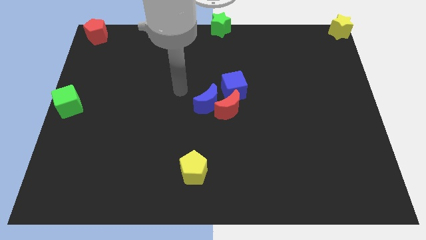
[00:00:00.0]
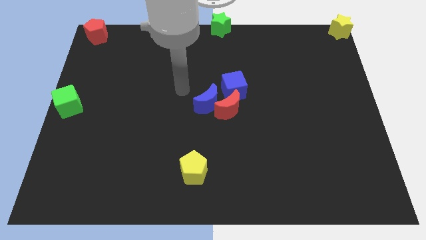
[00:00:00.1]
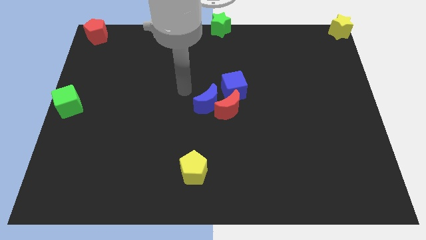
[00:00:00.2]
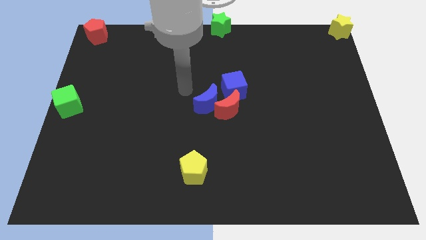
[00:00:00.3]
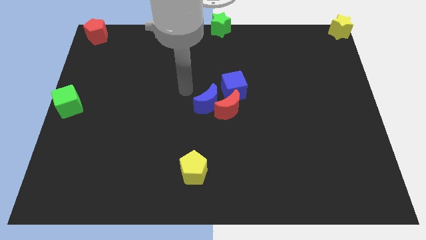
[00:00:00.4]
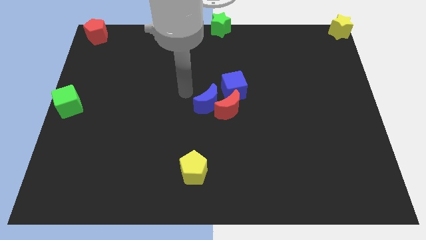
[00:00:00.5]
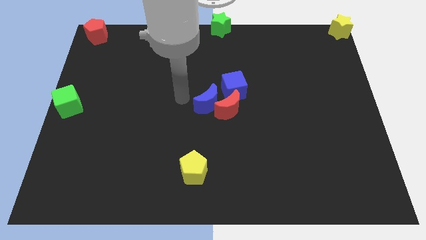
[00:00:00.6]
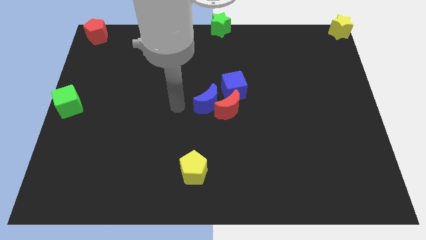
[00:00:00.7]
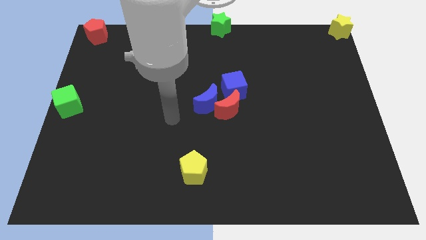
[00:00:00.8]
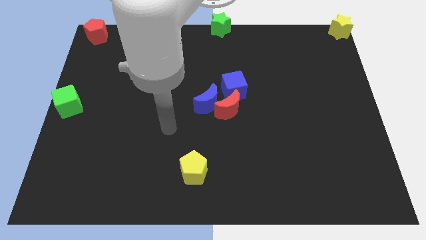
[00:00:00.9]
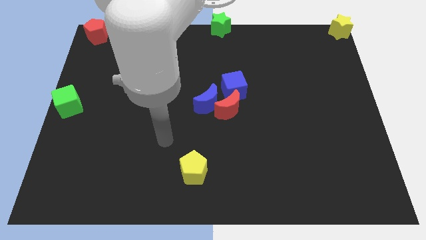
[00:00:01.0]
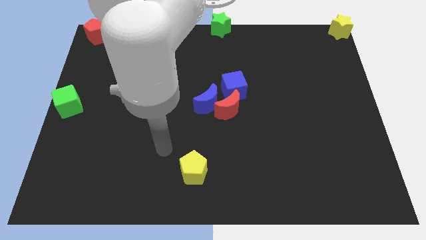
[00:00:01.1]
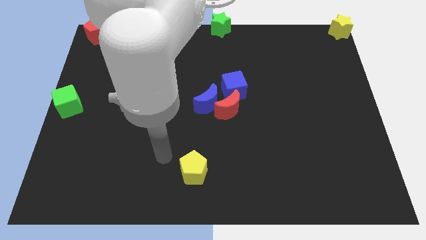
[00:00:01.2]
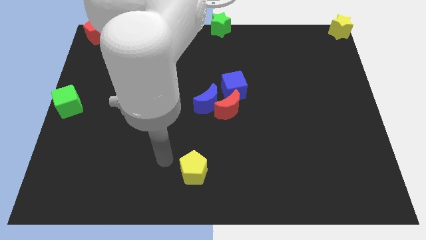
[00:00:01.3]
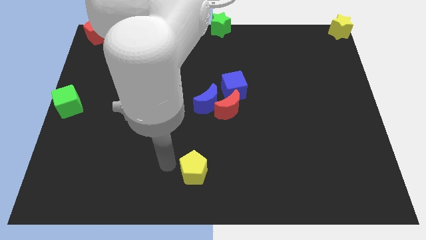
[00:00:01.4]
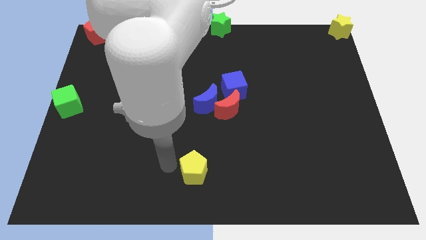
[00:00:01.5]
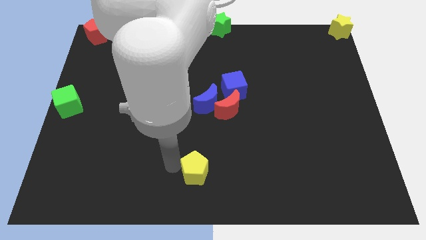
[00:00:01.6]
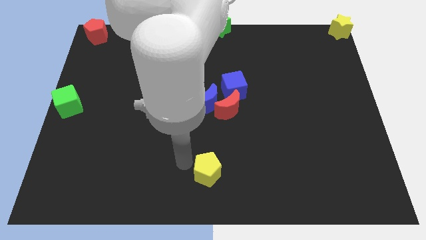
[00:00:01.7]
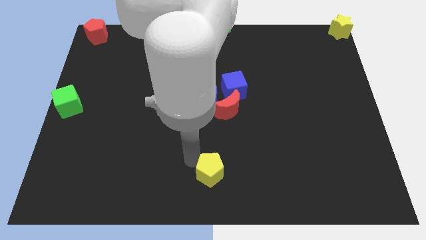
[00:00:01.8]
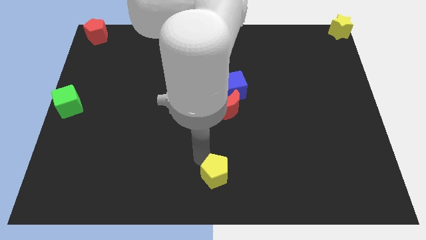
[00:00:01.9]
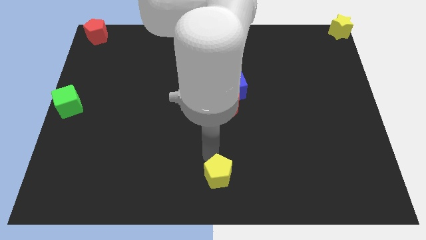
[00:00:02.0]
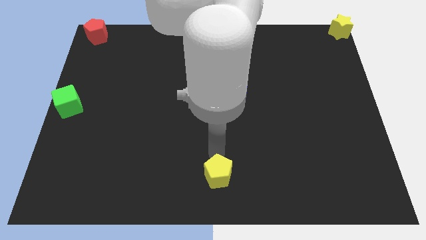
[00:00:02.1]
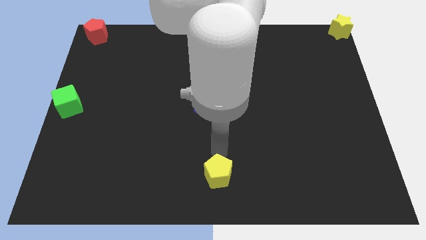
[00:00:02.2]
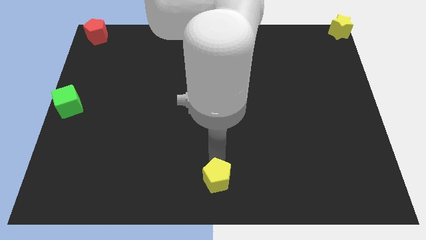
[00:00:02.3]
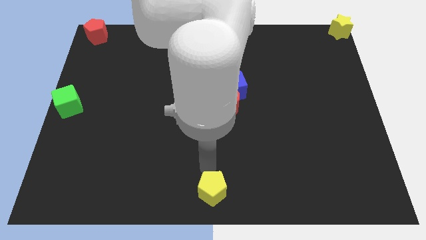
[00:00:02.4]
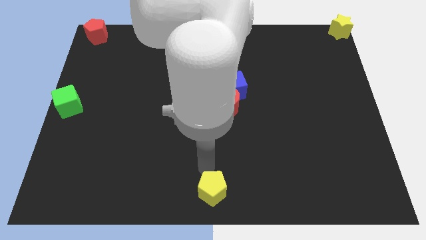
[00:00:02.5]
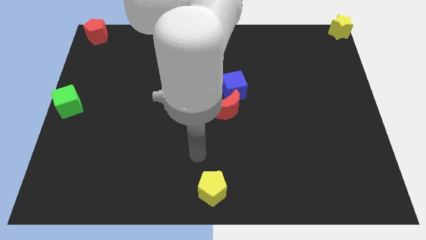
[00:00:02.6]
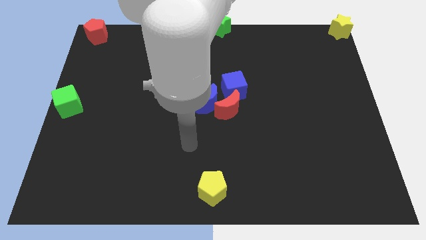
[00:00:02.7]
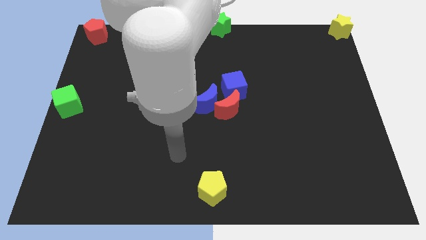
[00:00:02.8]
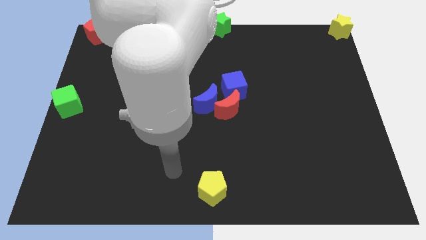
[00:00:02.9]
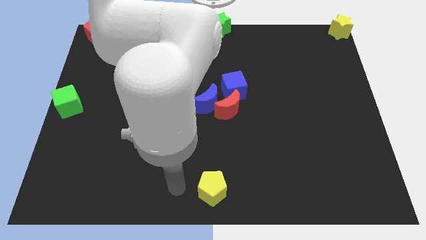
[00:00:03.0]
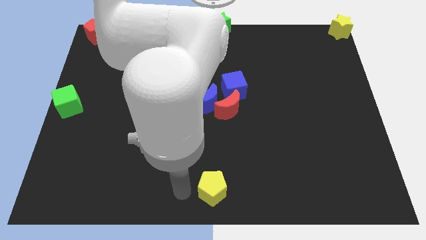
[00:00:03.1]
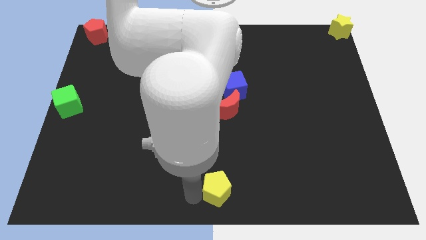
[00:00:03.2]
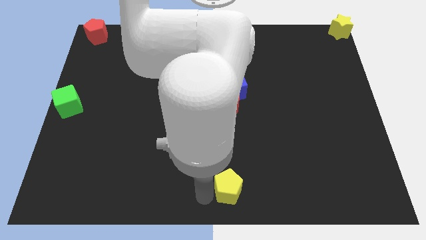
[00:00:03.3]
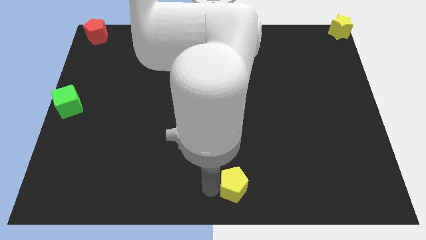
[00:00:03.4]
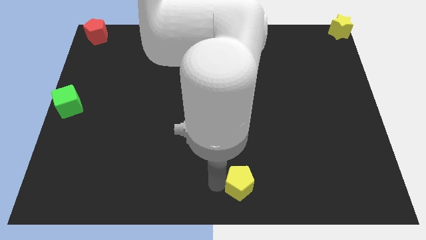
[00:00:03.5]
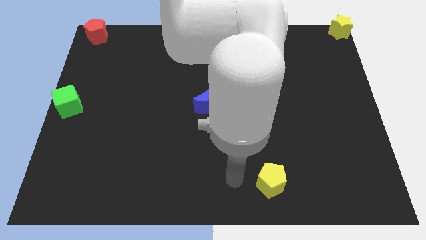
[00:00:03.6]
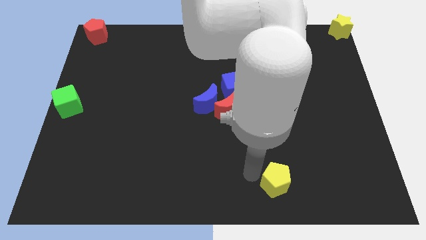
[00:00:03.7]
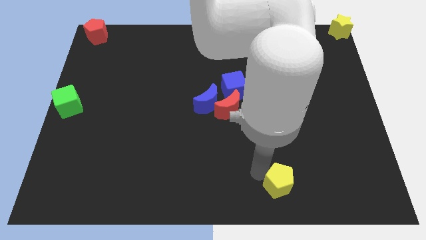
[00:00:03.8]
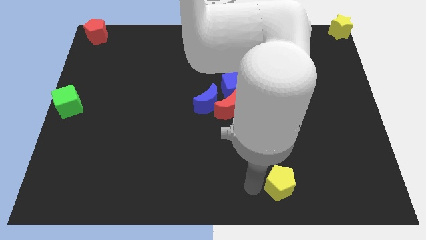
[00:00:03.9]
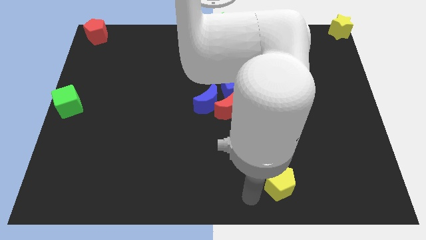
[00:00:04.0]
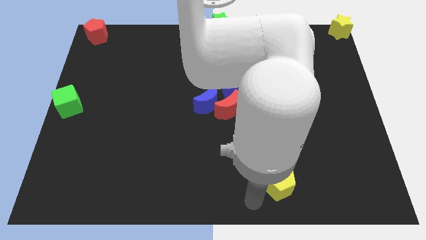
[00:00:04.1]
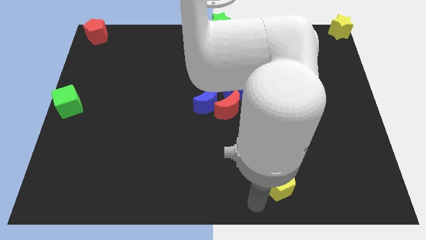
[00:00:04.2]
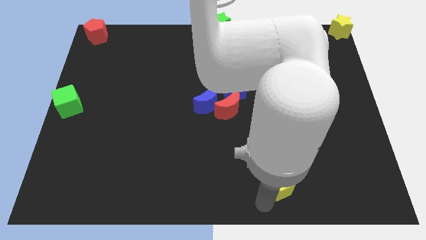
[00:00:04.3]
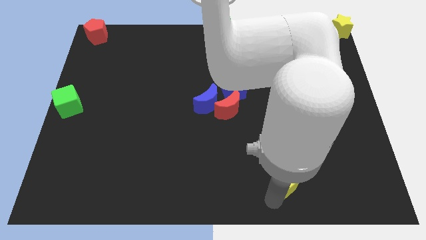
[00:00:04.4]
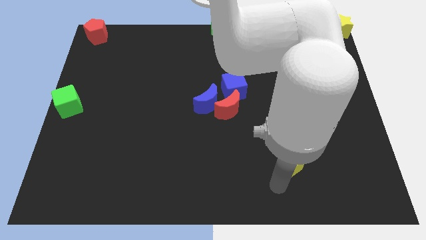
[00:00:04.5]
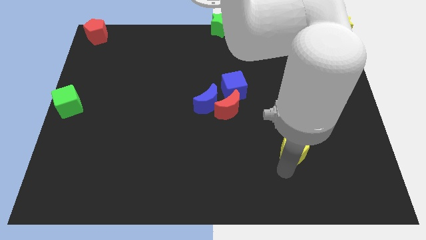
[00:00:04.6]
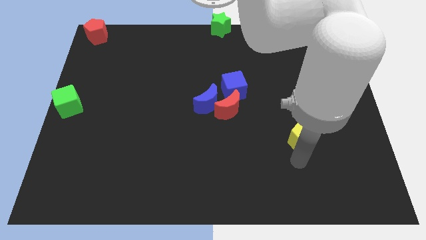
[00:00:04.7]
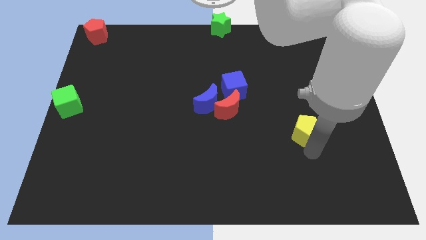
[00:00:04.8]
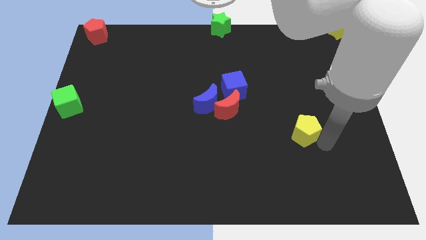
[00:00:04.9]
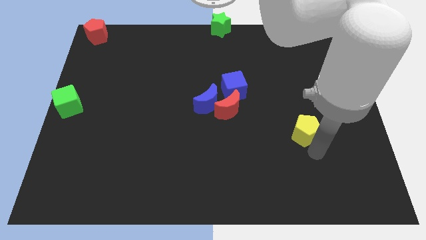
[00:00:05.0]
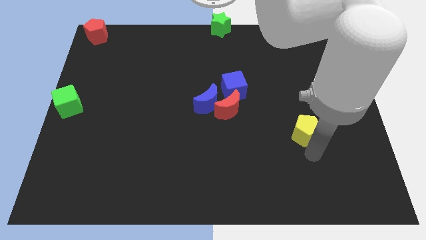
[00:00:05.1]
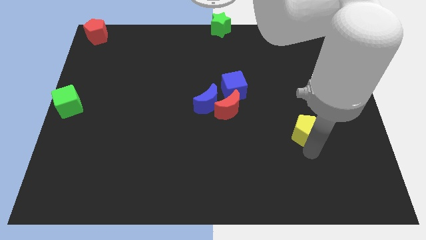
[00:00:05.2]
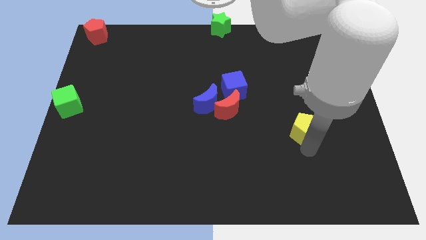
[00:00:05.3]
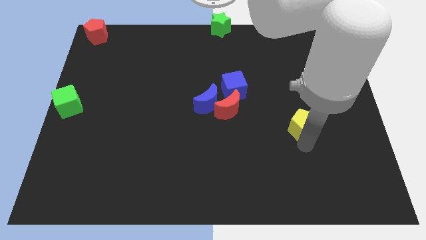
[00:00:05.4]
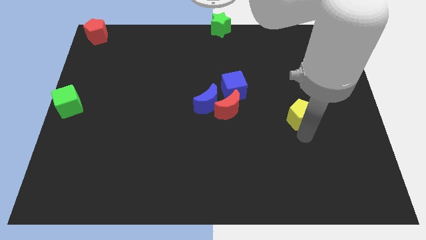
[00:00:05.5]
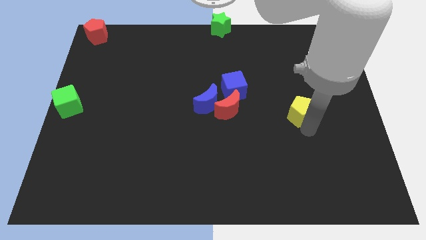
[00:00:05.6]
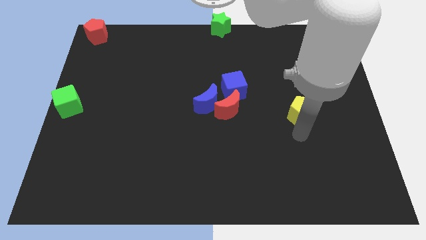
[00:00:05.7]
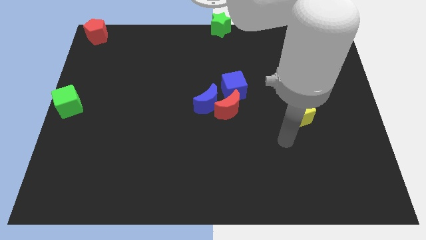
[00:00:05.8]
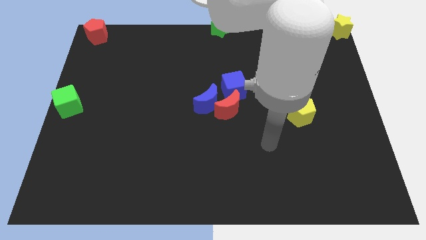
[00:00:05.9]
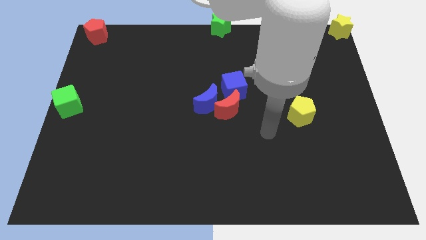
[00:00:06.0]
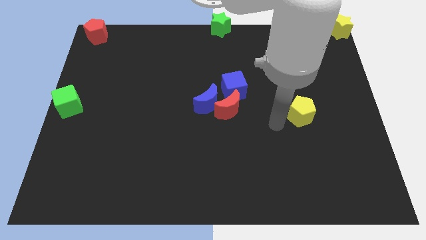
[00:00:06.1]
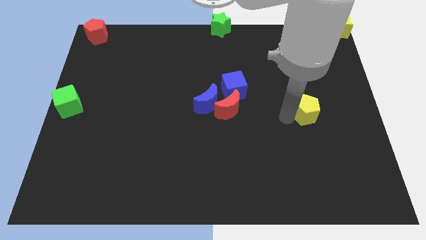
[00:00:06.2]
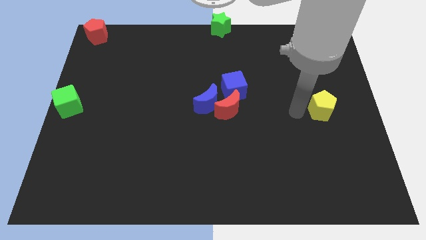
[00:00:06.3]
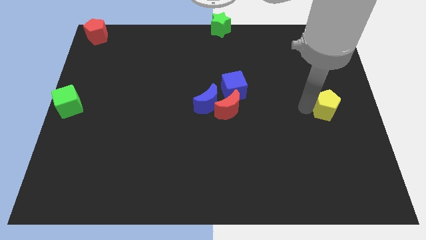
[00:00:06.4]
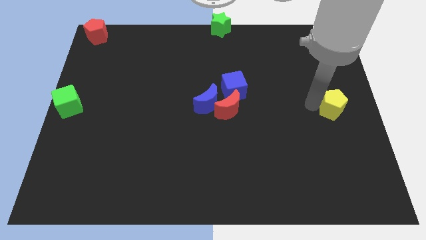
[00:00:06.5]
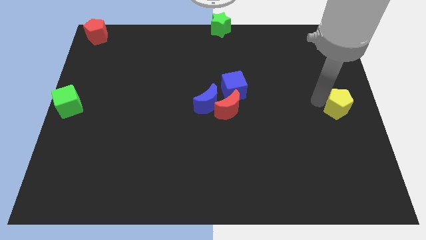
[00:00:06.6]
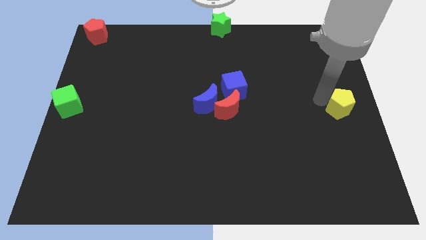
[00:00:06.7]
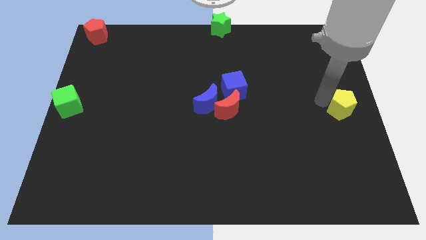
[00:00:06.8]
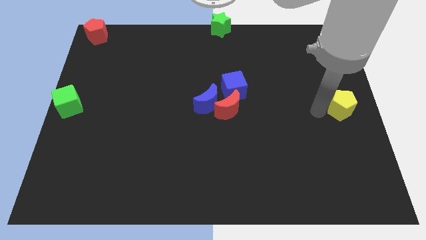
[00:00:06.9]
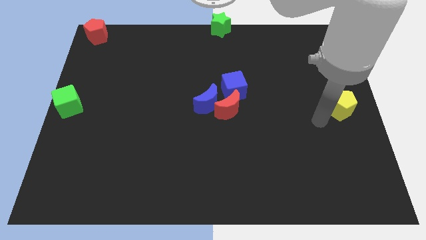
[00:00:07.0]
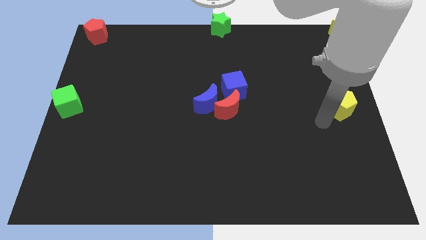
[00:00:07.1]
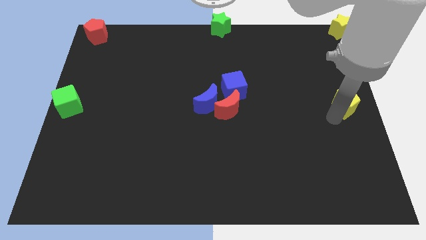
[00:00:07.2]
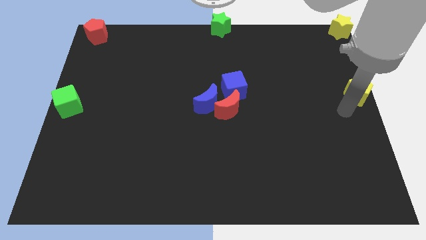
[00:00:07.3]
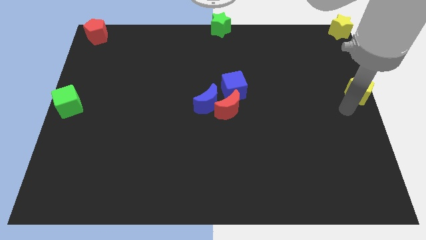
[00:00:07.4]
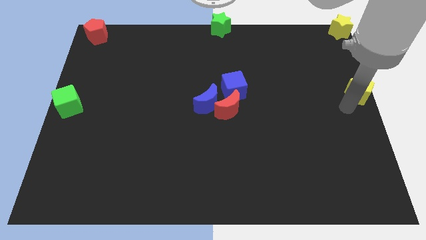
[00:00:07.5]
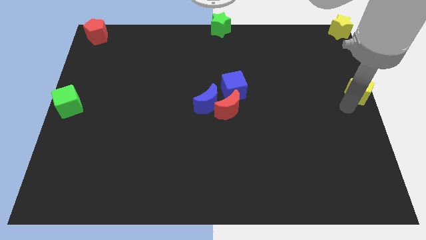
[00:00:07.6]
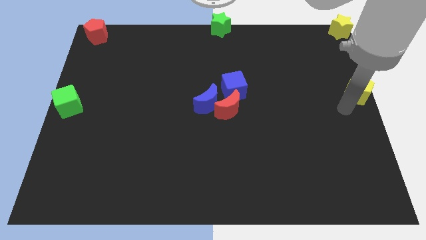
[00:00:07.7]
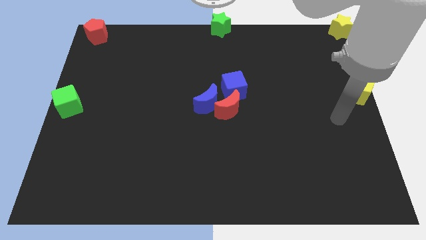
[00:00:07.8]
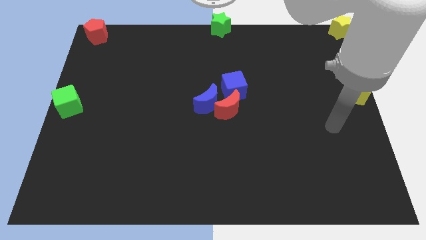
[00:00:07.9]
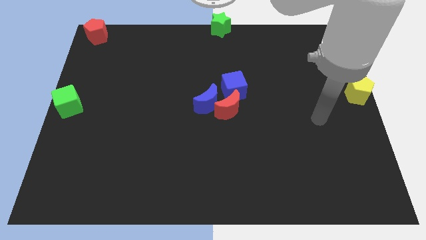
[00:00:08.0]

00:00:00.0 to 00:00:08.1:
slide the yellow pentagon to the right center of the board

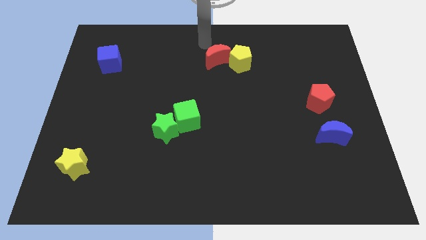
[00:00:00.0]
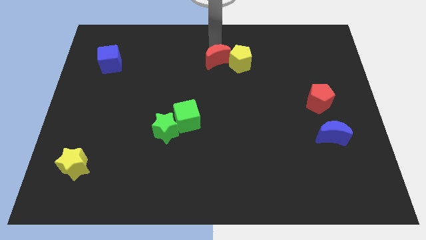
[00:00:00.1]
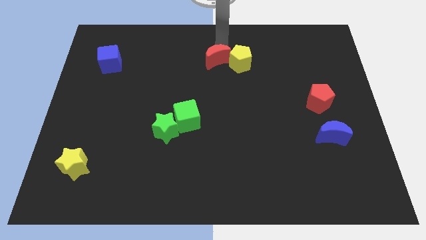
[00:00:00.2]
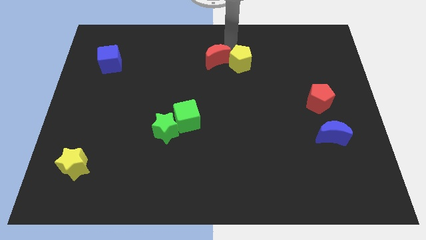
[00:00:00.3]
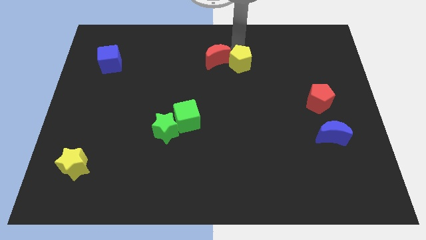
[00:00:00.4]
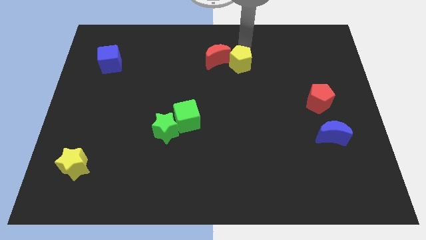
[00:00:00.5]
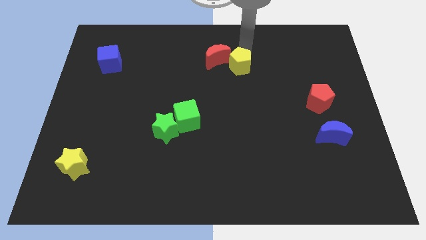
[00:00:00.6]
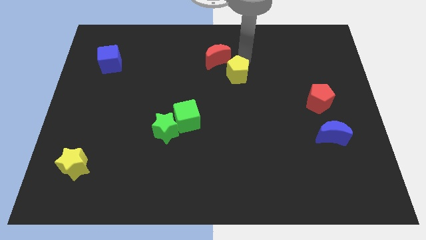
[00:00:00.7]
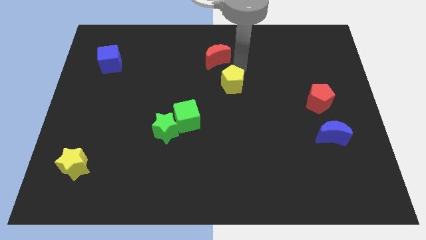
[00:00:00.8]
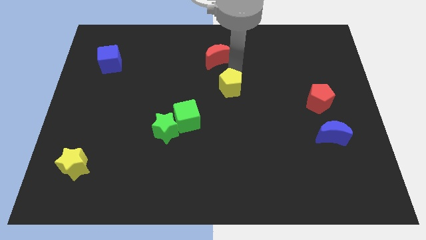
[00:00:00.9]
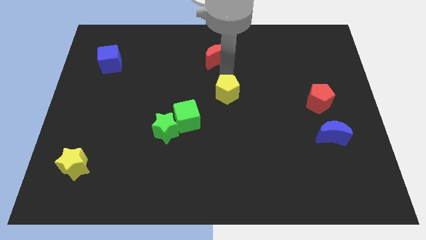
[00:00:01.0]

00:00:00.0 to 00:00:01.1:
separate yellow pentagon from red moon
